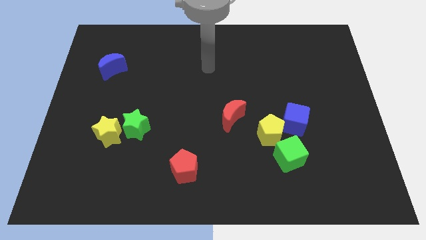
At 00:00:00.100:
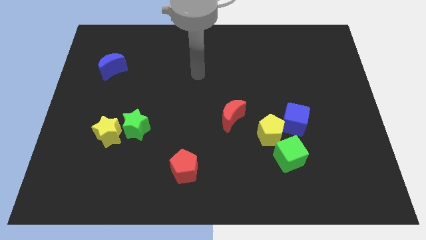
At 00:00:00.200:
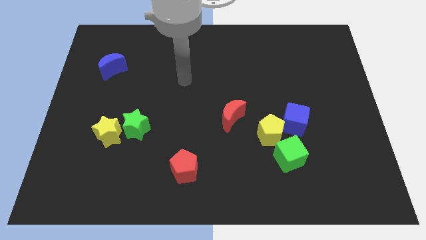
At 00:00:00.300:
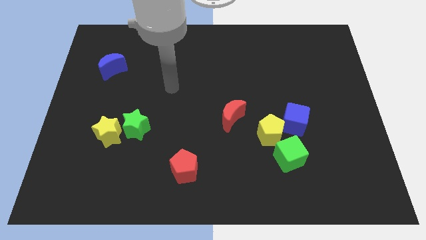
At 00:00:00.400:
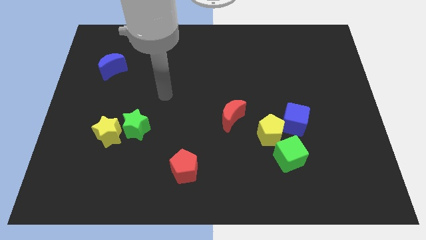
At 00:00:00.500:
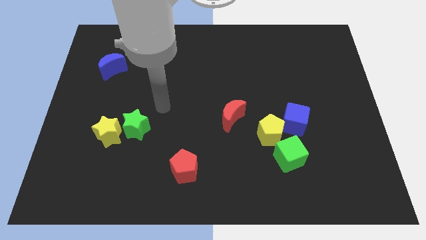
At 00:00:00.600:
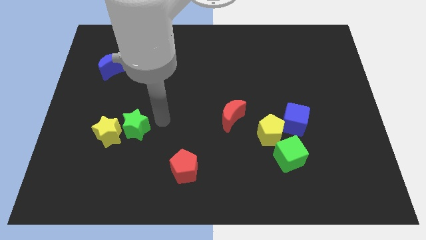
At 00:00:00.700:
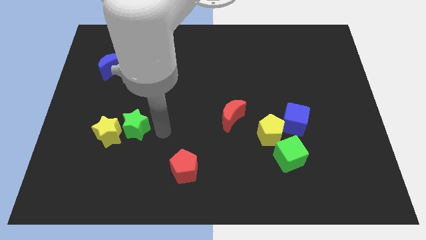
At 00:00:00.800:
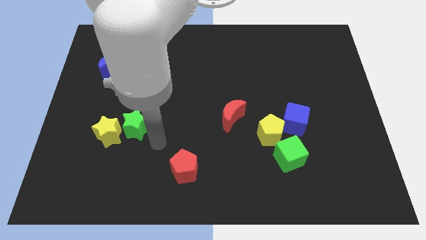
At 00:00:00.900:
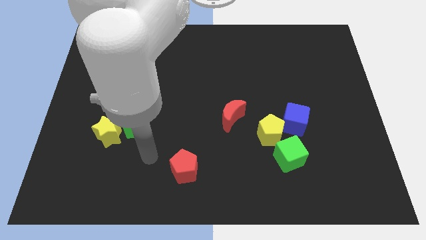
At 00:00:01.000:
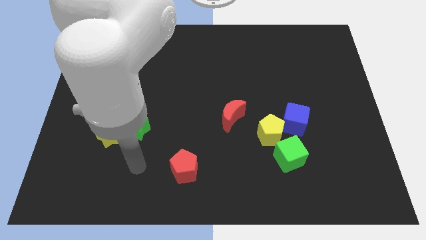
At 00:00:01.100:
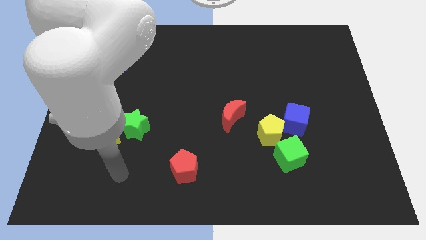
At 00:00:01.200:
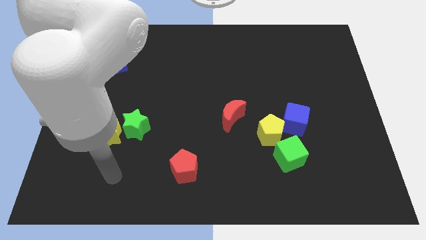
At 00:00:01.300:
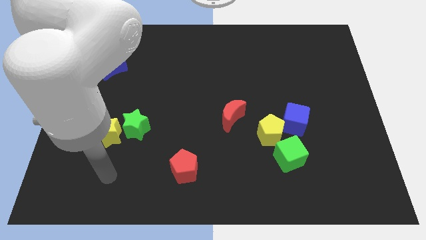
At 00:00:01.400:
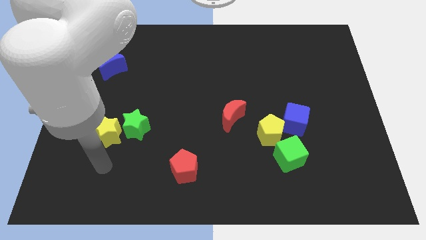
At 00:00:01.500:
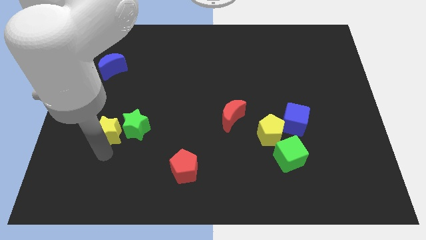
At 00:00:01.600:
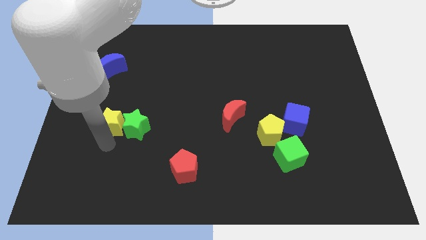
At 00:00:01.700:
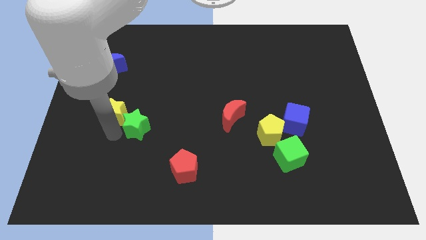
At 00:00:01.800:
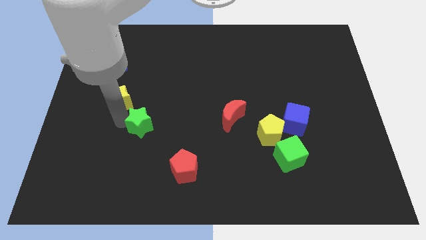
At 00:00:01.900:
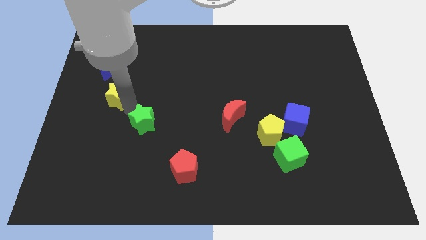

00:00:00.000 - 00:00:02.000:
push the yellow star slightly towards up

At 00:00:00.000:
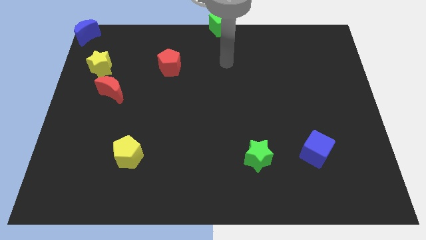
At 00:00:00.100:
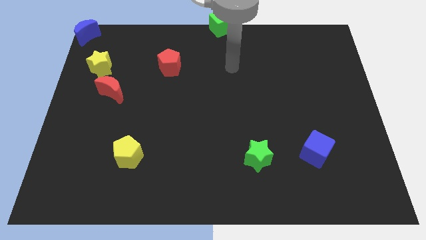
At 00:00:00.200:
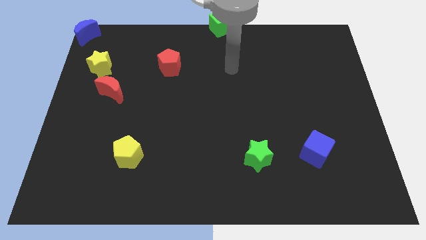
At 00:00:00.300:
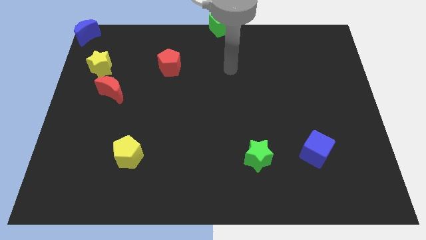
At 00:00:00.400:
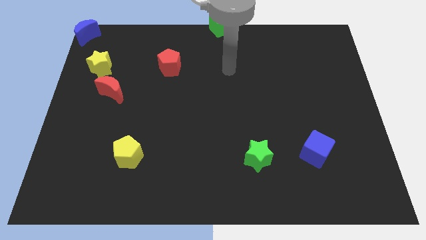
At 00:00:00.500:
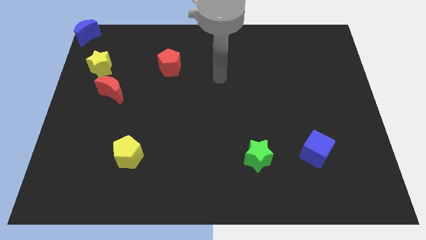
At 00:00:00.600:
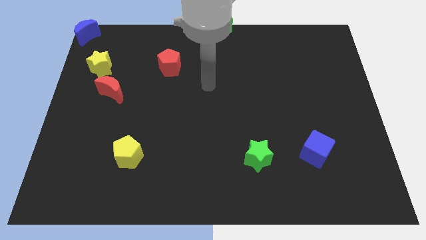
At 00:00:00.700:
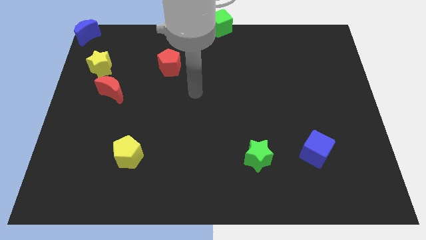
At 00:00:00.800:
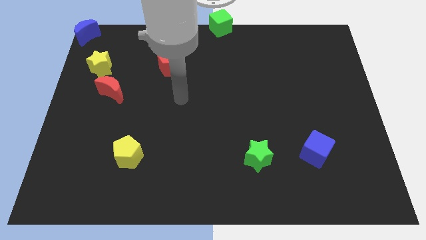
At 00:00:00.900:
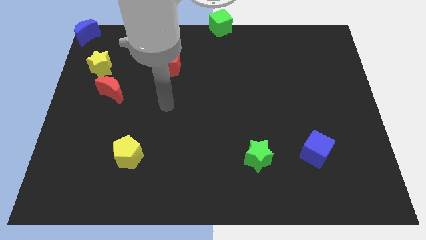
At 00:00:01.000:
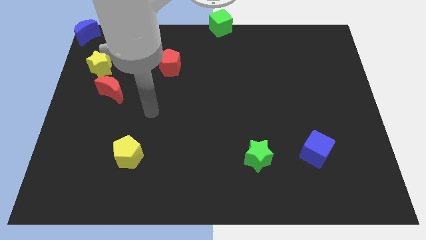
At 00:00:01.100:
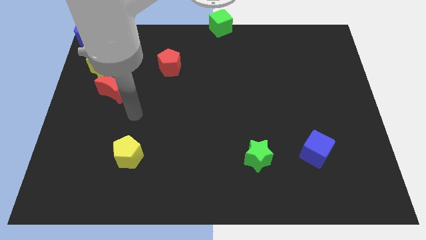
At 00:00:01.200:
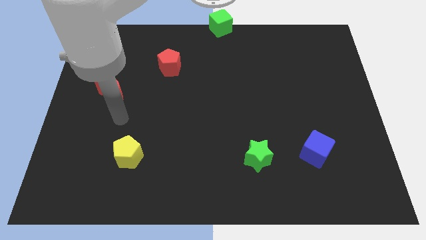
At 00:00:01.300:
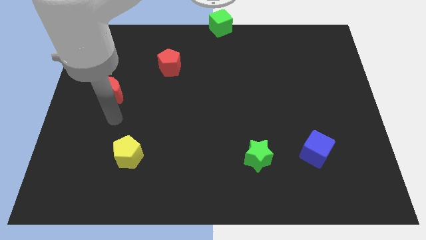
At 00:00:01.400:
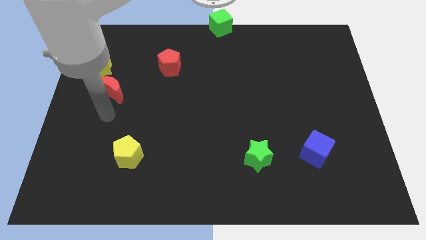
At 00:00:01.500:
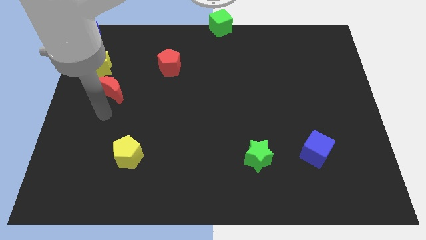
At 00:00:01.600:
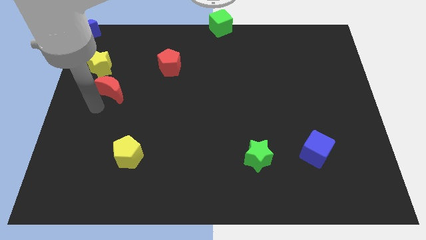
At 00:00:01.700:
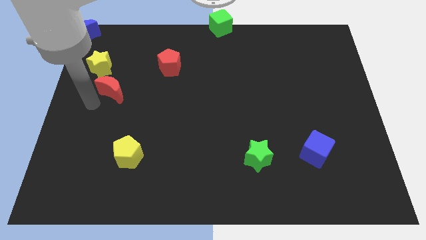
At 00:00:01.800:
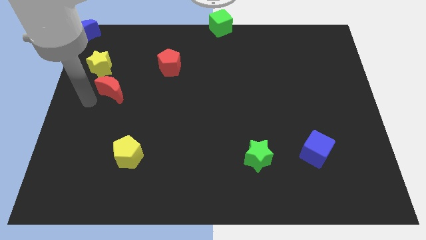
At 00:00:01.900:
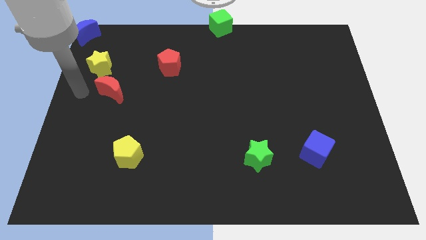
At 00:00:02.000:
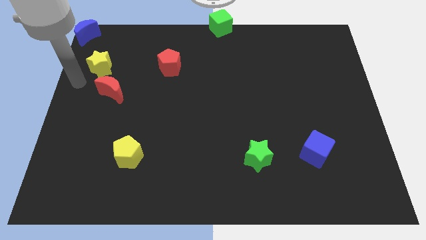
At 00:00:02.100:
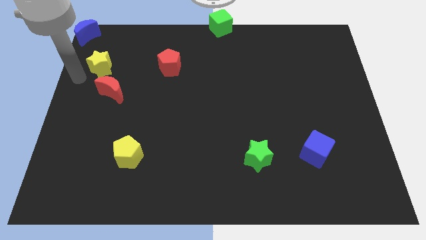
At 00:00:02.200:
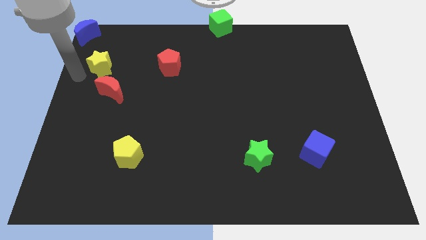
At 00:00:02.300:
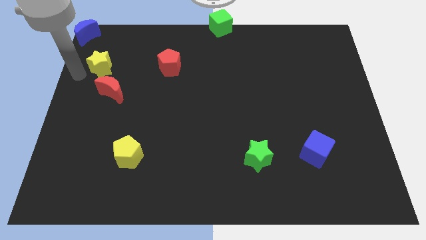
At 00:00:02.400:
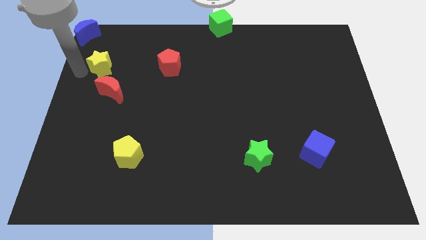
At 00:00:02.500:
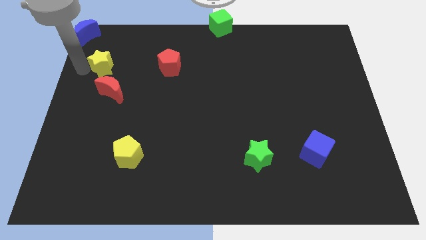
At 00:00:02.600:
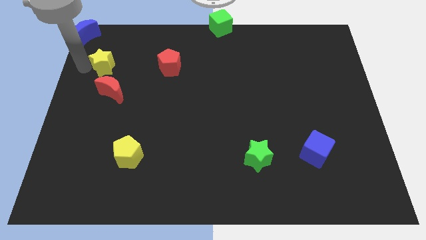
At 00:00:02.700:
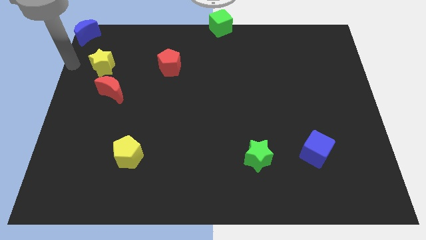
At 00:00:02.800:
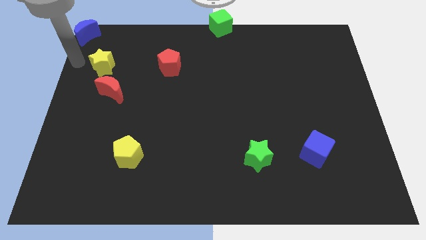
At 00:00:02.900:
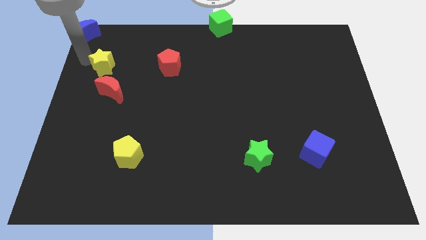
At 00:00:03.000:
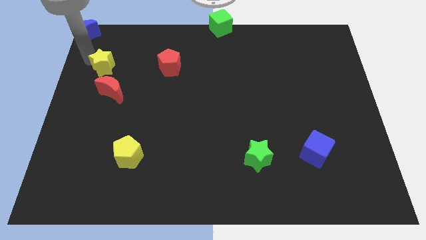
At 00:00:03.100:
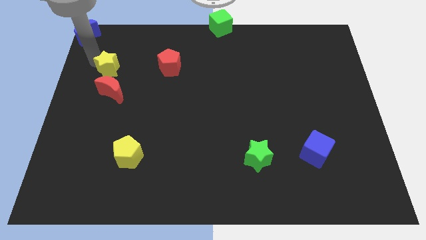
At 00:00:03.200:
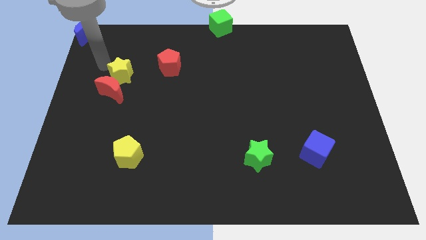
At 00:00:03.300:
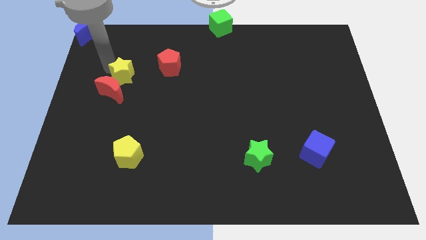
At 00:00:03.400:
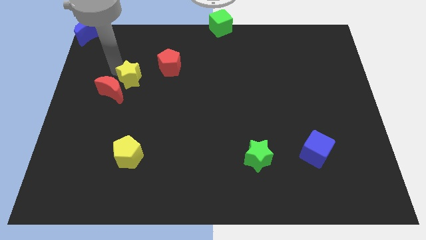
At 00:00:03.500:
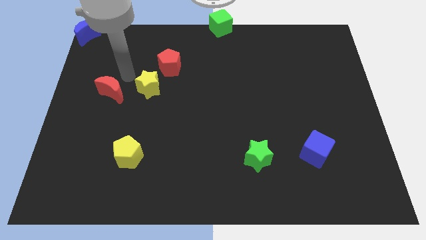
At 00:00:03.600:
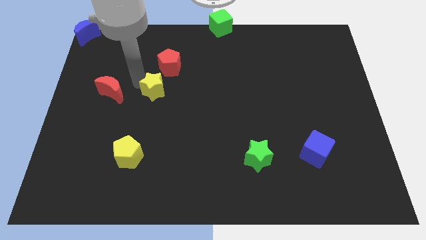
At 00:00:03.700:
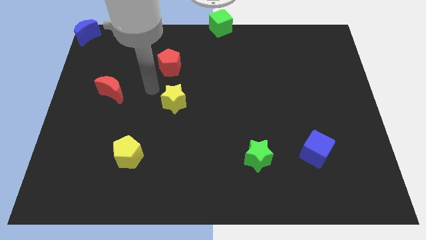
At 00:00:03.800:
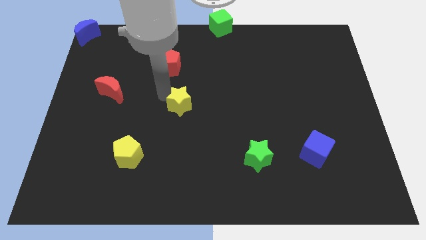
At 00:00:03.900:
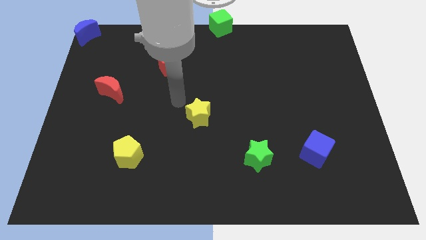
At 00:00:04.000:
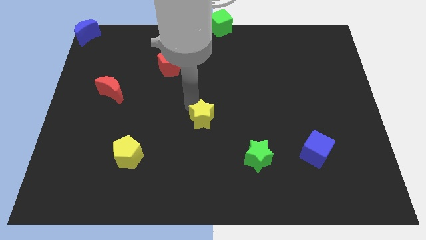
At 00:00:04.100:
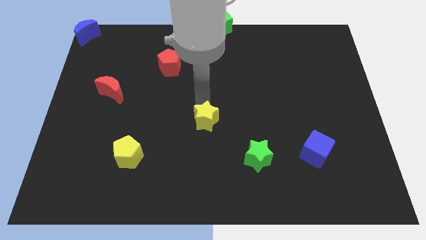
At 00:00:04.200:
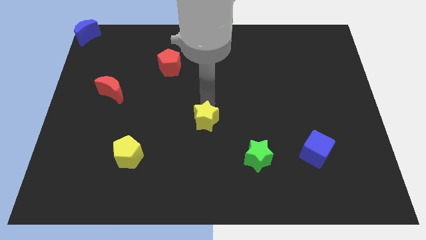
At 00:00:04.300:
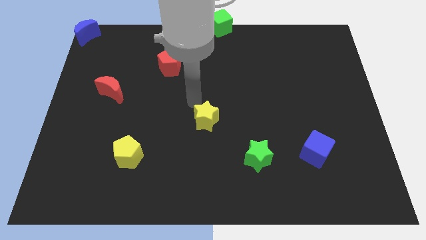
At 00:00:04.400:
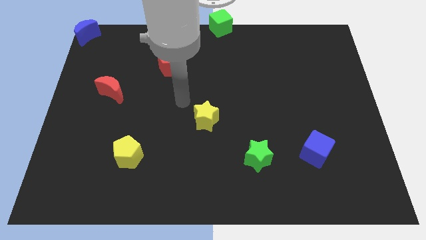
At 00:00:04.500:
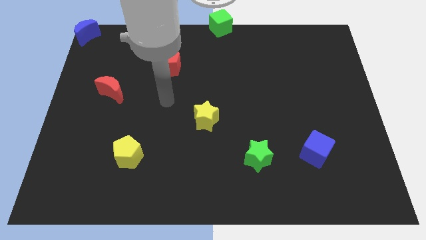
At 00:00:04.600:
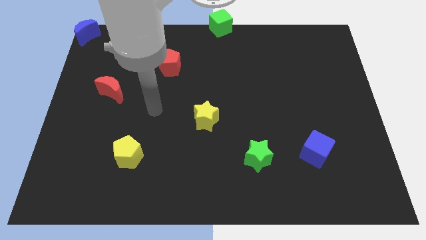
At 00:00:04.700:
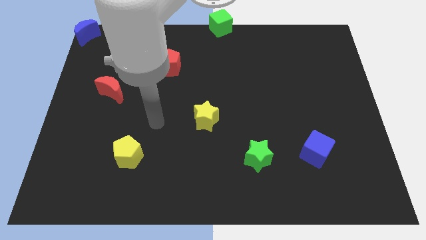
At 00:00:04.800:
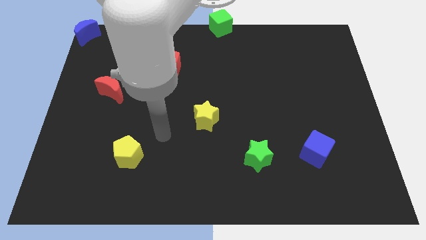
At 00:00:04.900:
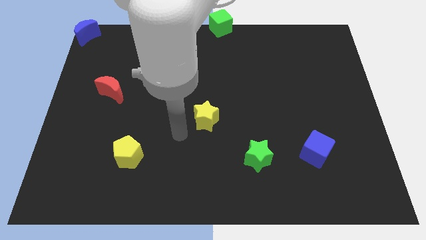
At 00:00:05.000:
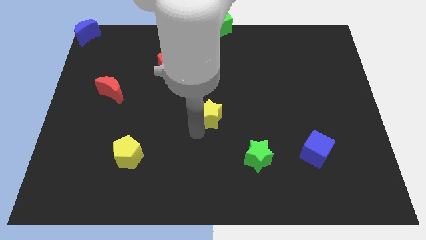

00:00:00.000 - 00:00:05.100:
put the yellow star between the red pentagon and green star

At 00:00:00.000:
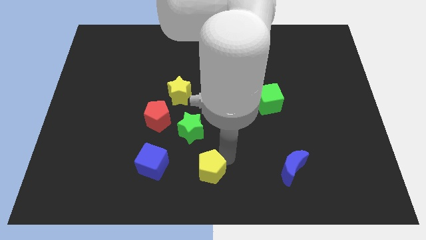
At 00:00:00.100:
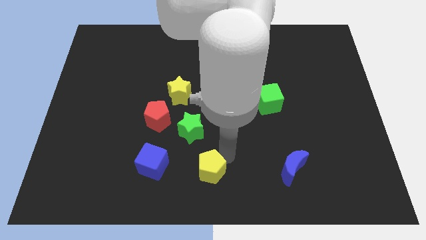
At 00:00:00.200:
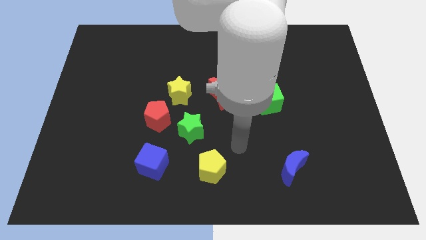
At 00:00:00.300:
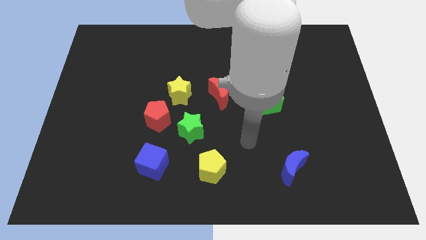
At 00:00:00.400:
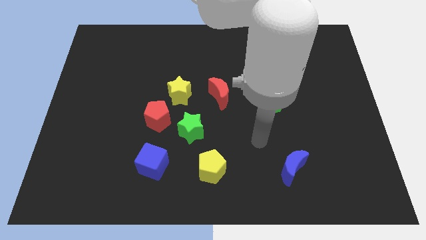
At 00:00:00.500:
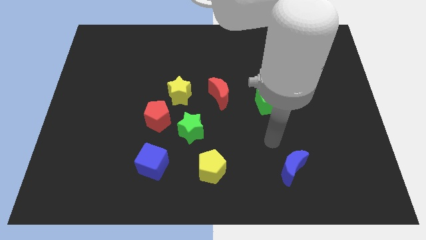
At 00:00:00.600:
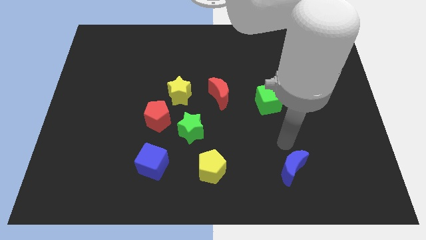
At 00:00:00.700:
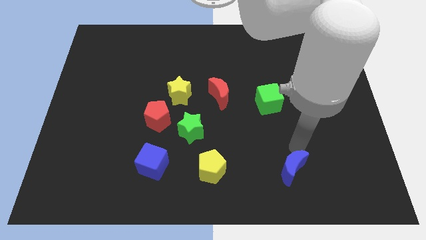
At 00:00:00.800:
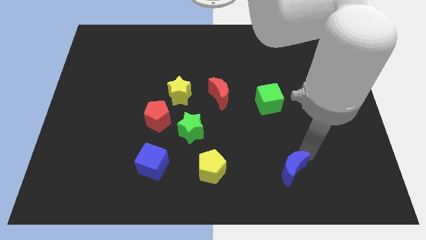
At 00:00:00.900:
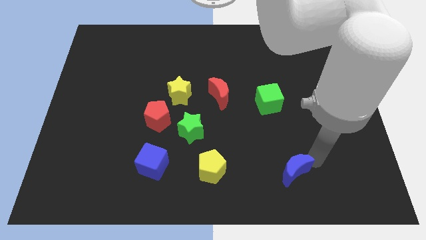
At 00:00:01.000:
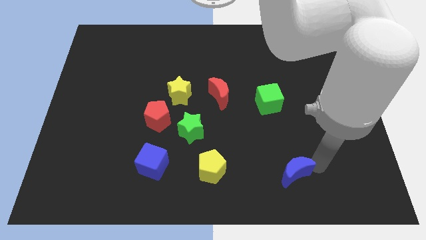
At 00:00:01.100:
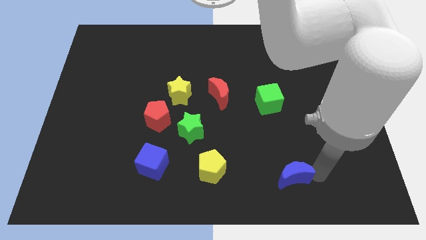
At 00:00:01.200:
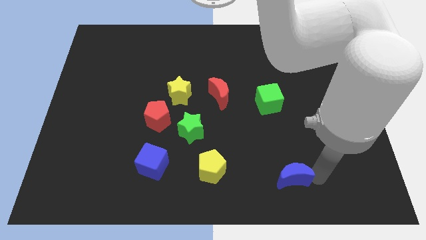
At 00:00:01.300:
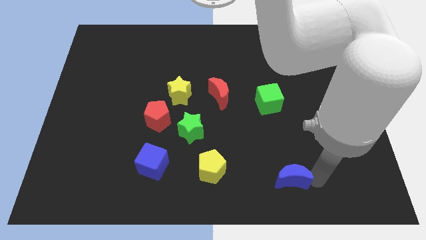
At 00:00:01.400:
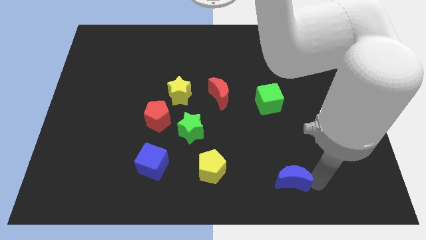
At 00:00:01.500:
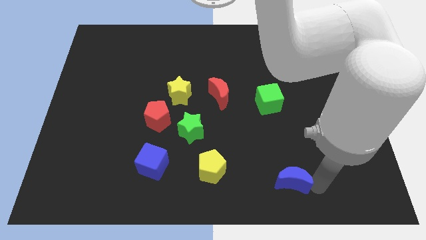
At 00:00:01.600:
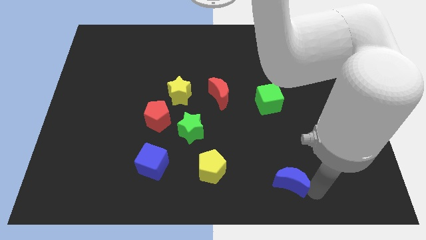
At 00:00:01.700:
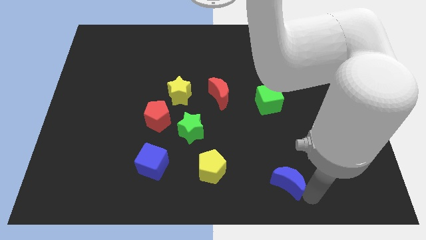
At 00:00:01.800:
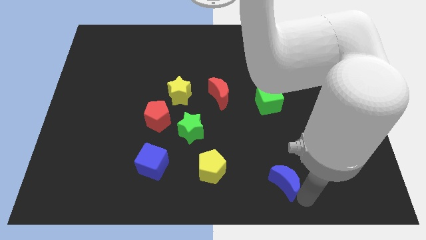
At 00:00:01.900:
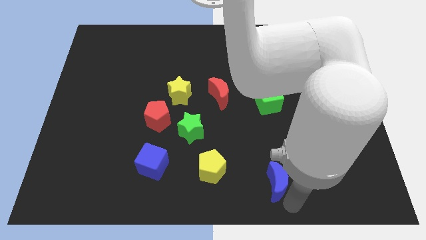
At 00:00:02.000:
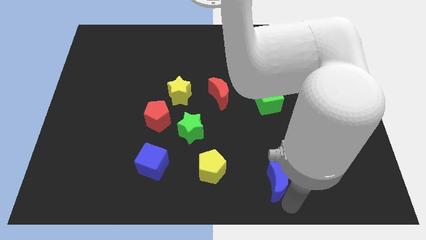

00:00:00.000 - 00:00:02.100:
move the blue moon sligtly downwards
